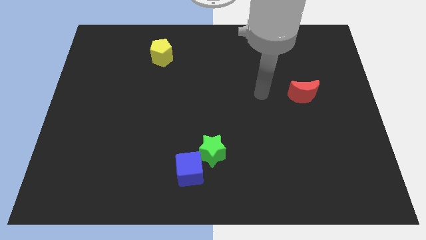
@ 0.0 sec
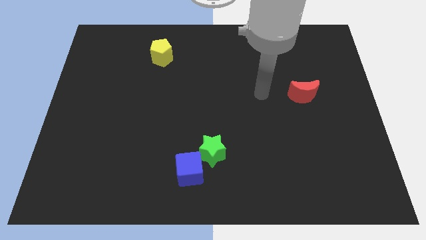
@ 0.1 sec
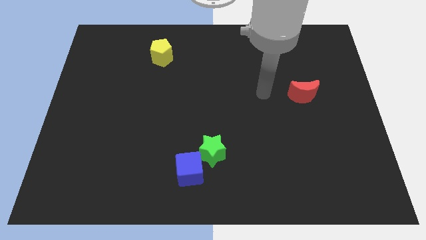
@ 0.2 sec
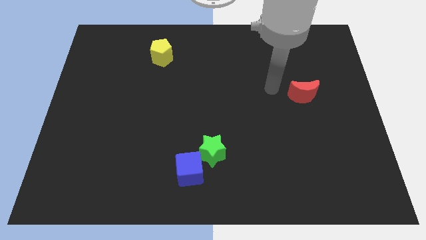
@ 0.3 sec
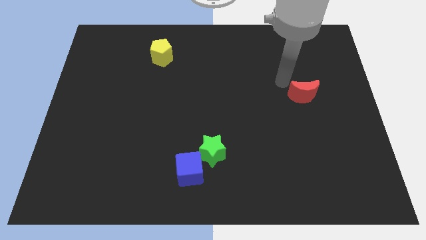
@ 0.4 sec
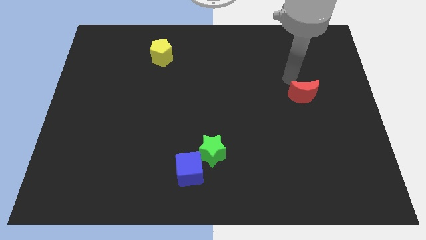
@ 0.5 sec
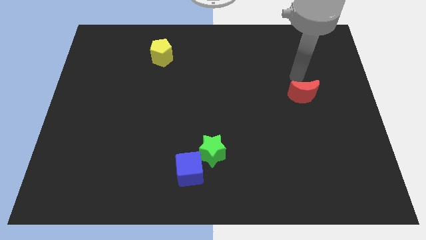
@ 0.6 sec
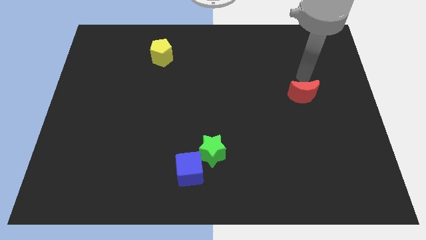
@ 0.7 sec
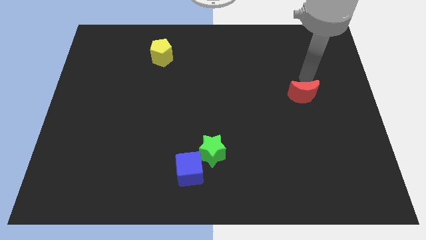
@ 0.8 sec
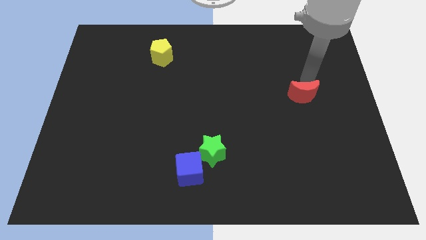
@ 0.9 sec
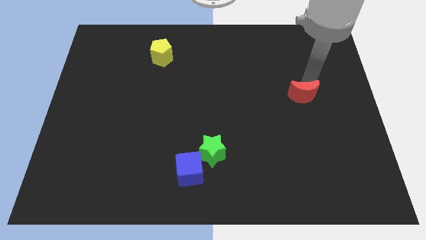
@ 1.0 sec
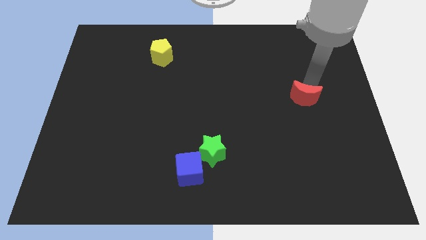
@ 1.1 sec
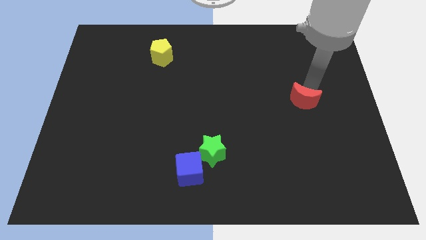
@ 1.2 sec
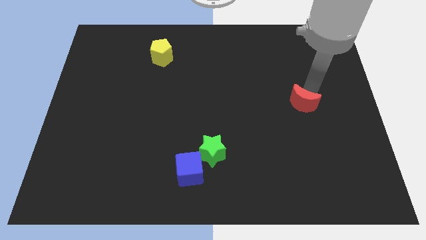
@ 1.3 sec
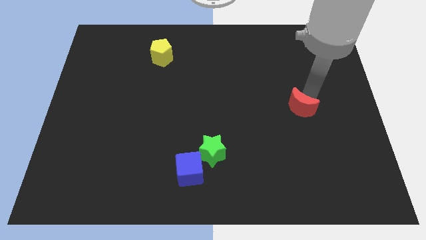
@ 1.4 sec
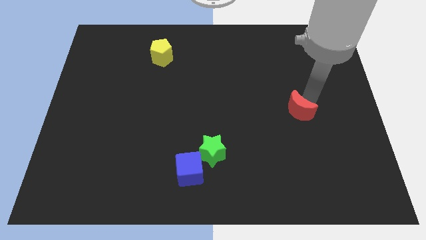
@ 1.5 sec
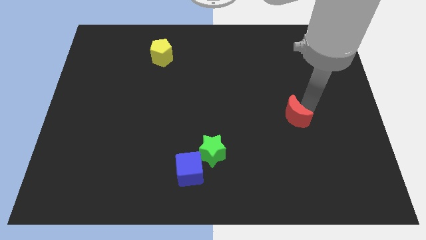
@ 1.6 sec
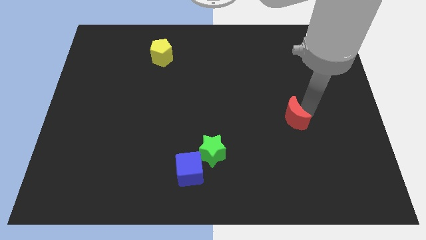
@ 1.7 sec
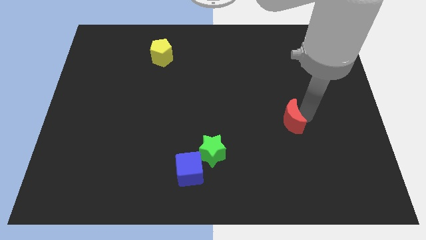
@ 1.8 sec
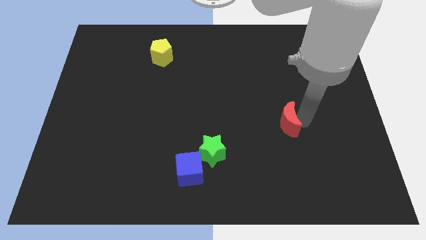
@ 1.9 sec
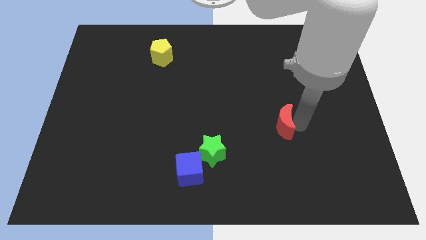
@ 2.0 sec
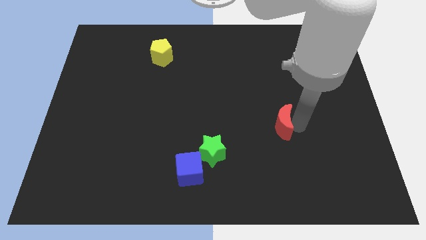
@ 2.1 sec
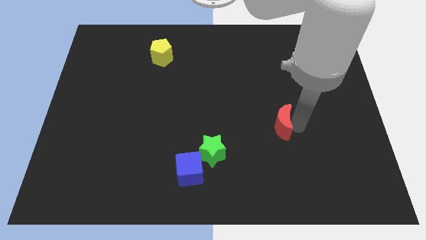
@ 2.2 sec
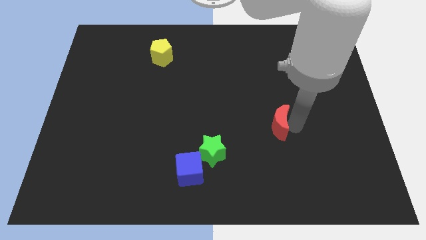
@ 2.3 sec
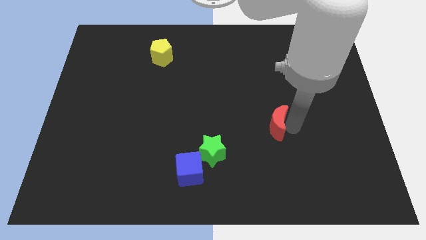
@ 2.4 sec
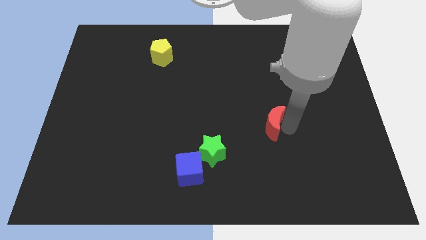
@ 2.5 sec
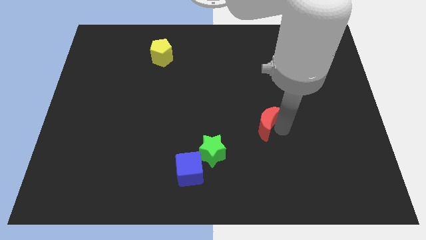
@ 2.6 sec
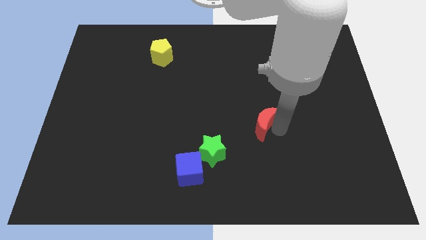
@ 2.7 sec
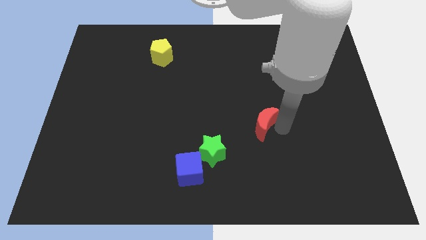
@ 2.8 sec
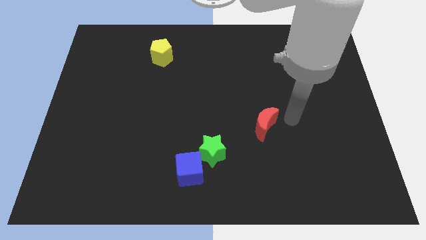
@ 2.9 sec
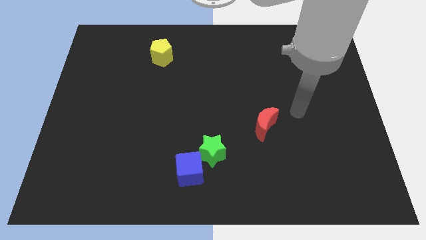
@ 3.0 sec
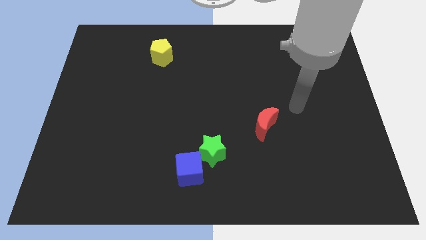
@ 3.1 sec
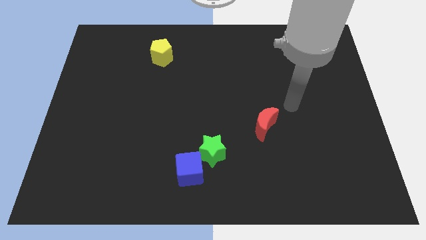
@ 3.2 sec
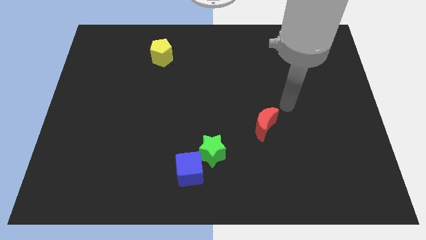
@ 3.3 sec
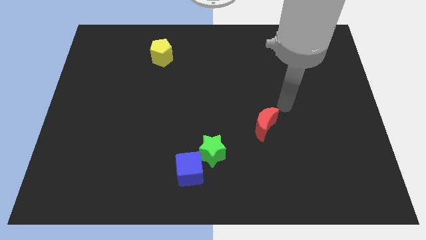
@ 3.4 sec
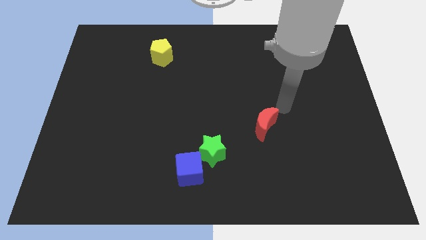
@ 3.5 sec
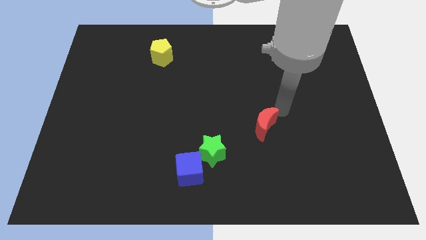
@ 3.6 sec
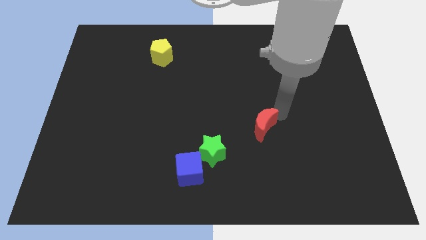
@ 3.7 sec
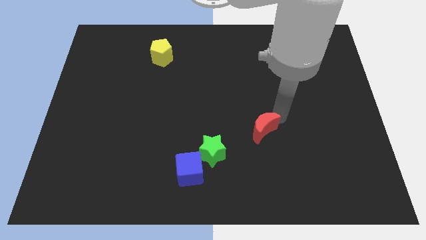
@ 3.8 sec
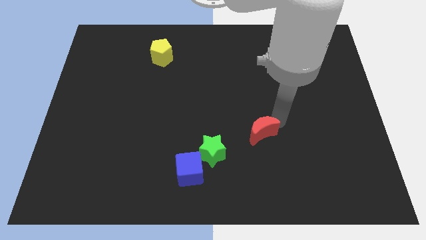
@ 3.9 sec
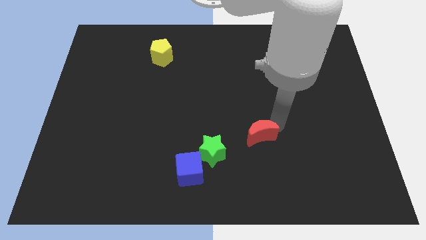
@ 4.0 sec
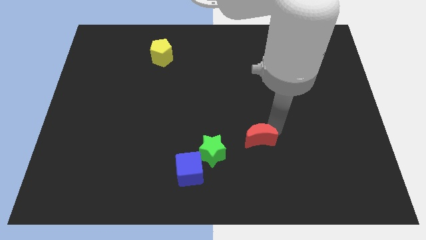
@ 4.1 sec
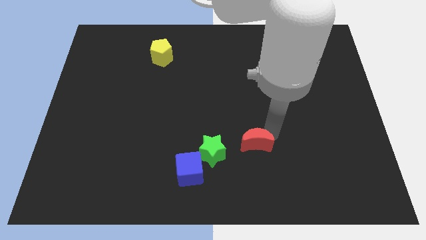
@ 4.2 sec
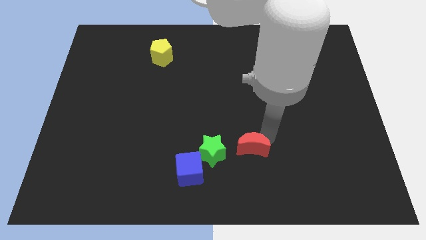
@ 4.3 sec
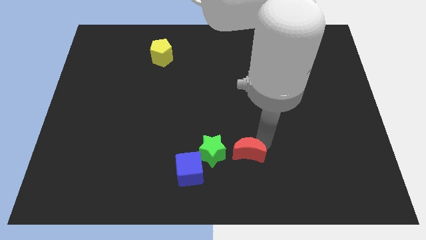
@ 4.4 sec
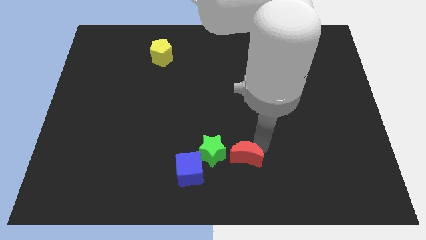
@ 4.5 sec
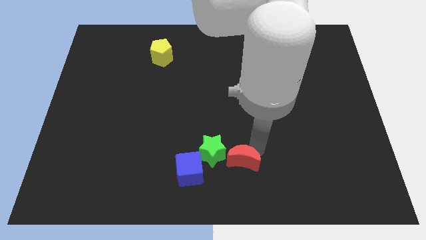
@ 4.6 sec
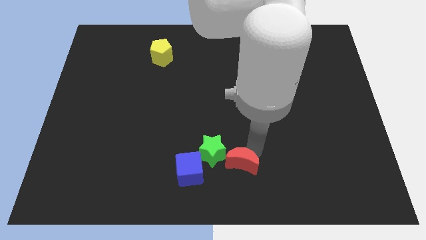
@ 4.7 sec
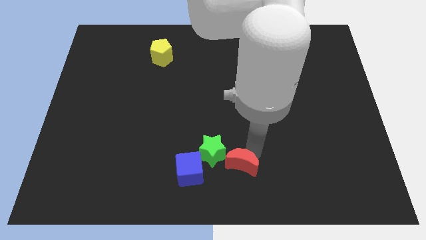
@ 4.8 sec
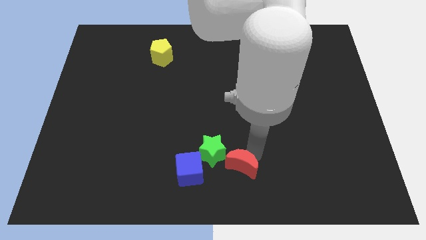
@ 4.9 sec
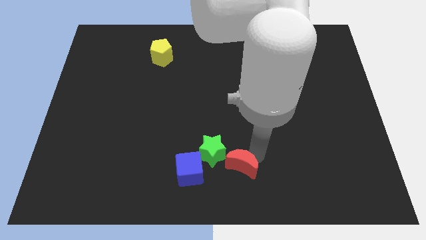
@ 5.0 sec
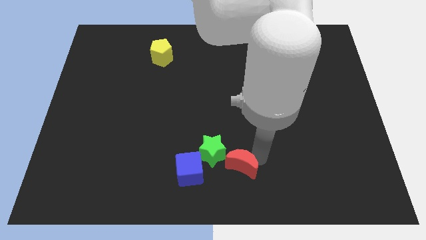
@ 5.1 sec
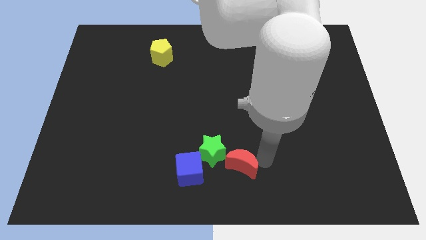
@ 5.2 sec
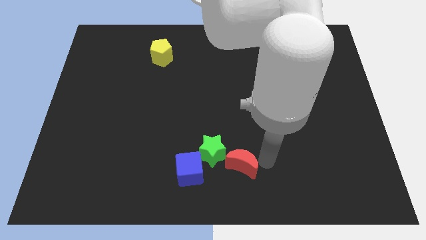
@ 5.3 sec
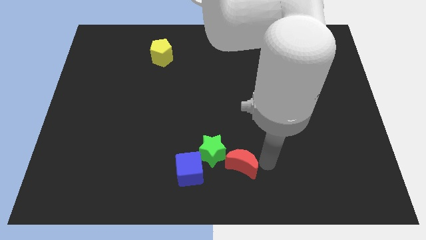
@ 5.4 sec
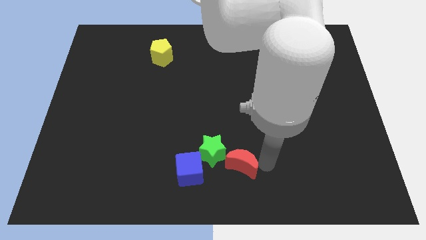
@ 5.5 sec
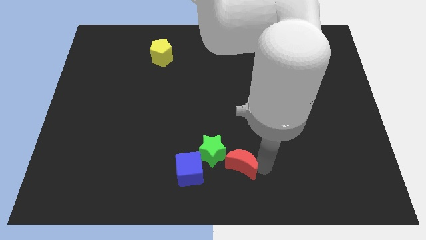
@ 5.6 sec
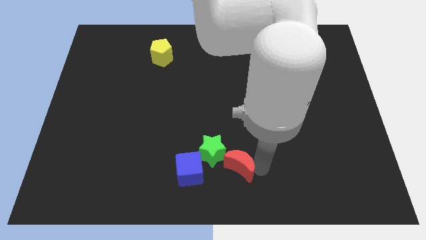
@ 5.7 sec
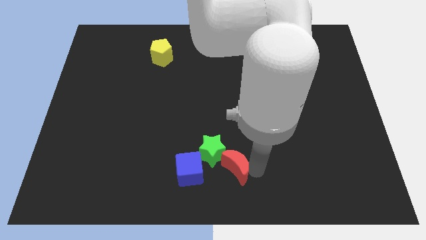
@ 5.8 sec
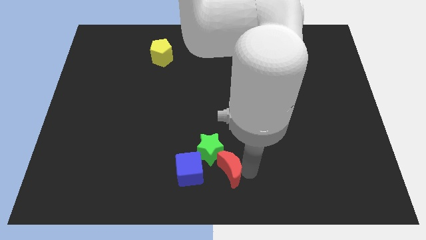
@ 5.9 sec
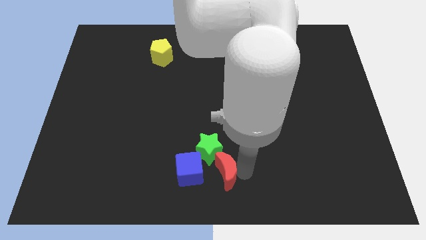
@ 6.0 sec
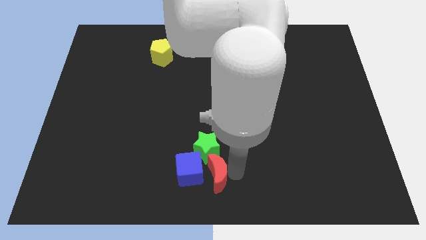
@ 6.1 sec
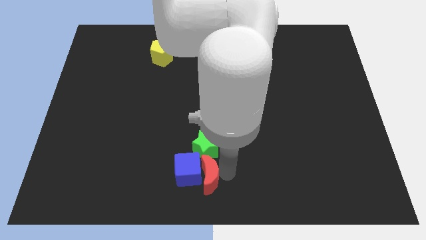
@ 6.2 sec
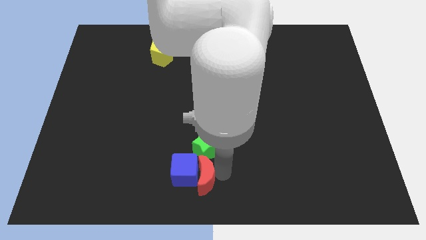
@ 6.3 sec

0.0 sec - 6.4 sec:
move the red moon next to the blue cube

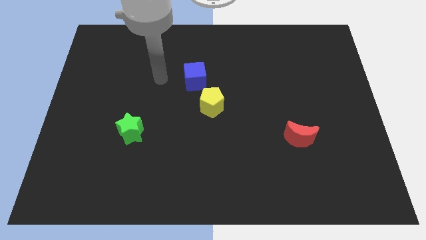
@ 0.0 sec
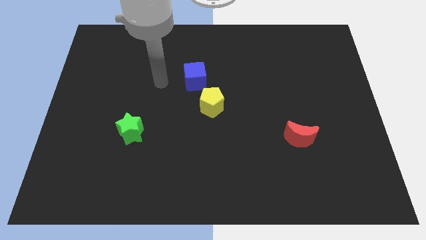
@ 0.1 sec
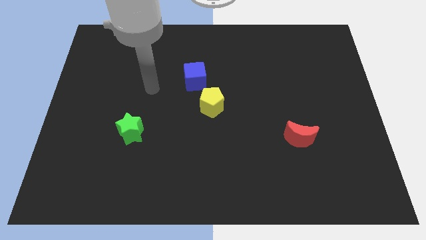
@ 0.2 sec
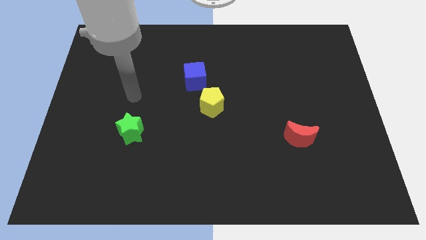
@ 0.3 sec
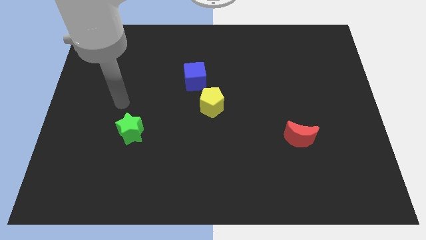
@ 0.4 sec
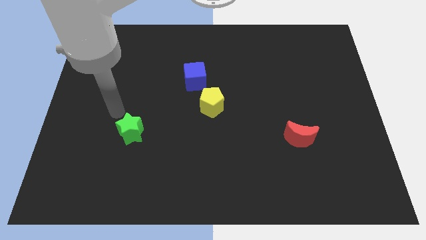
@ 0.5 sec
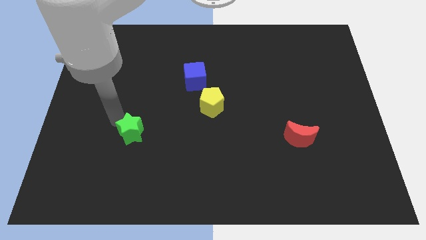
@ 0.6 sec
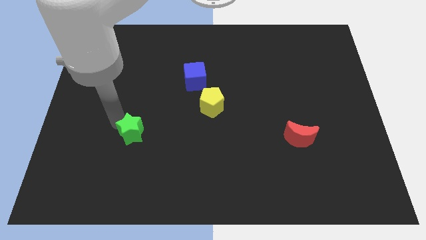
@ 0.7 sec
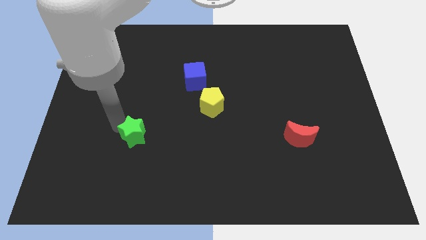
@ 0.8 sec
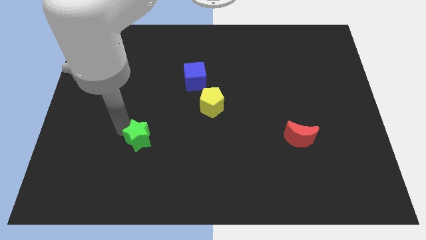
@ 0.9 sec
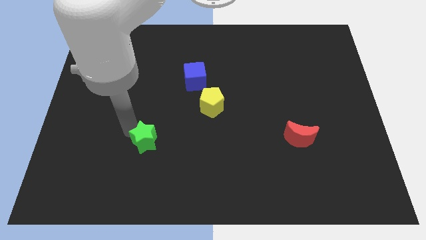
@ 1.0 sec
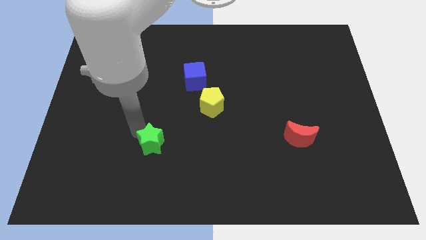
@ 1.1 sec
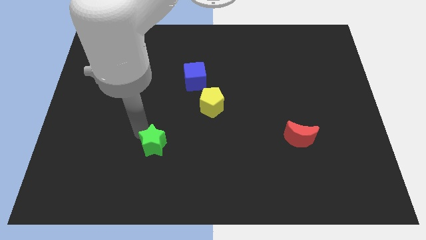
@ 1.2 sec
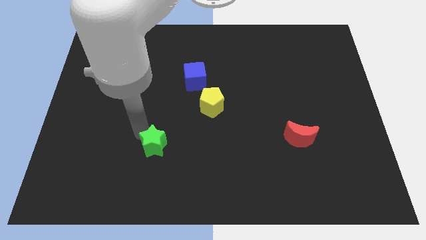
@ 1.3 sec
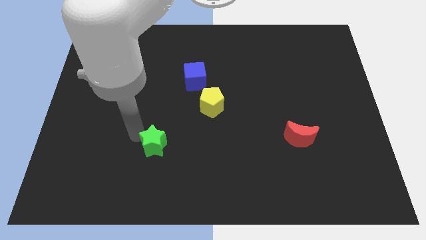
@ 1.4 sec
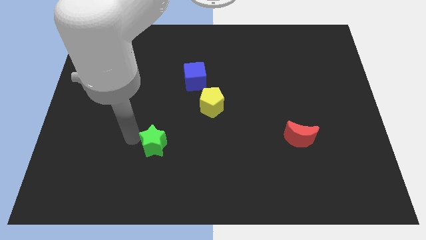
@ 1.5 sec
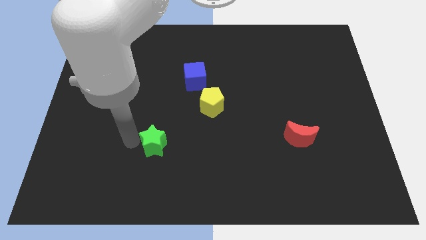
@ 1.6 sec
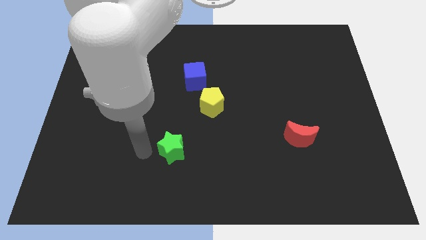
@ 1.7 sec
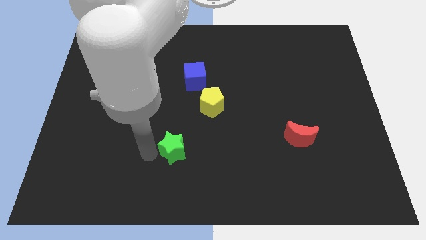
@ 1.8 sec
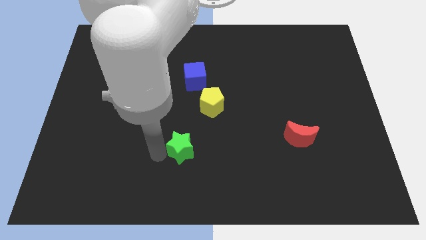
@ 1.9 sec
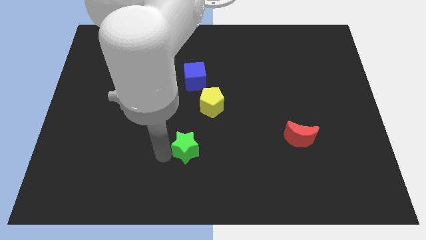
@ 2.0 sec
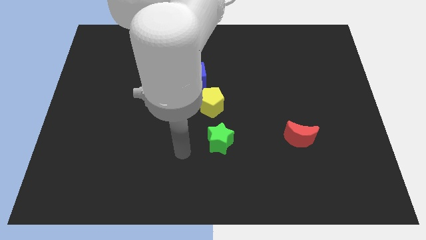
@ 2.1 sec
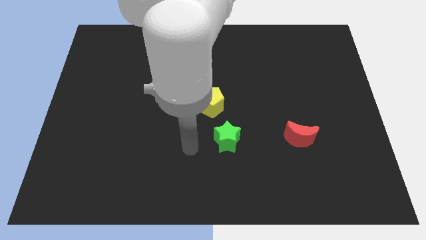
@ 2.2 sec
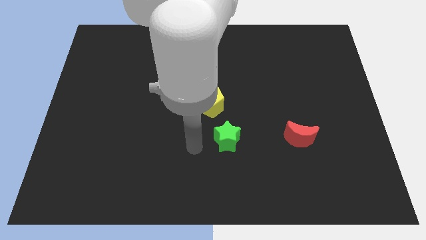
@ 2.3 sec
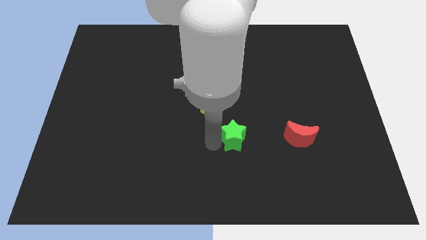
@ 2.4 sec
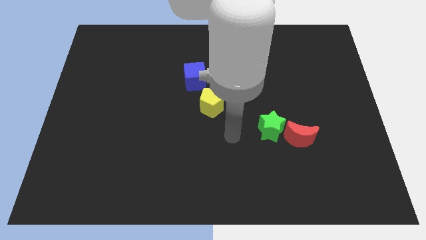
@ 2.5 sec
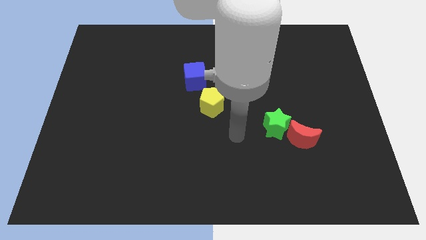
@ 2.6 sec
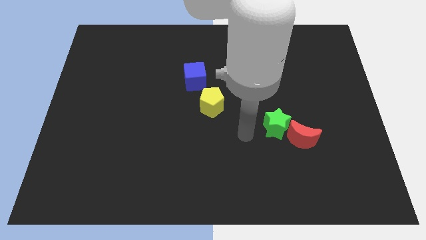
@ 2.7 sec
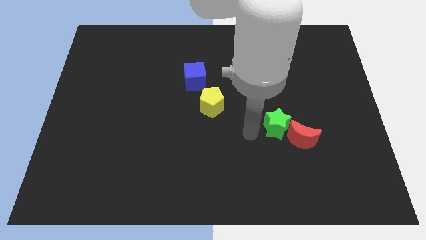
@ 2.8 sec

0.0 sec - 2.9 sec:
put the green star close to the red block
